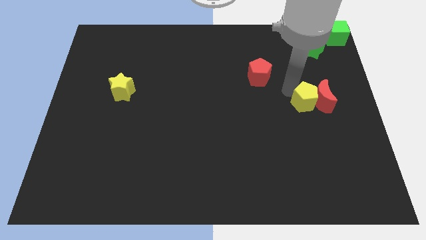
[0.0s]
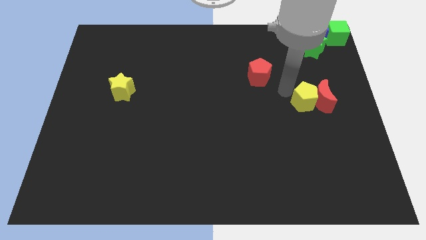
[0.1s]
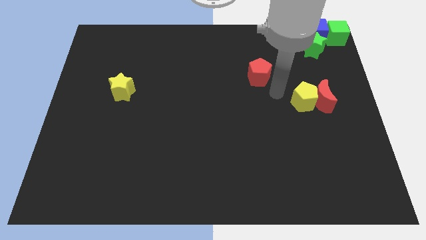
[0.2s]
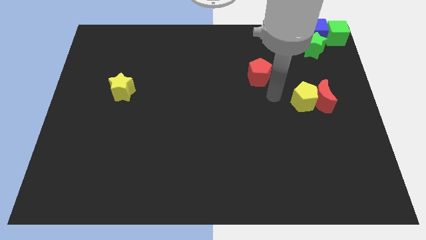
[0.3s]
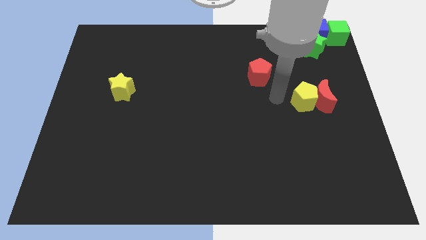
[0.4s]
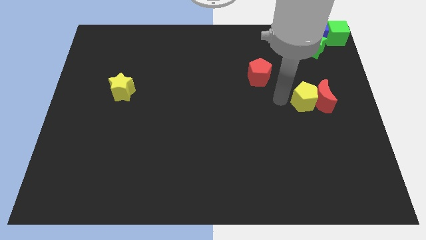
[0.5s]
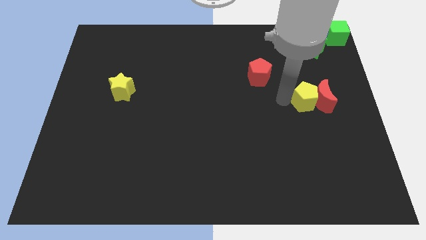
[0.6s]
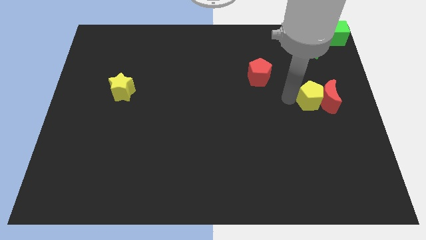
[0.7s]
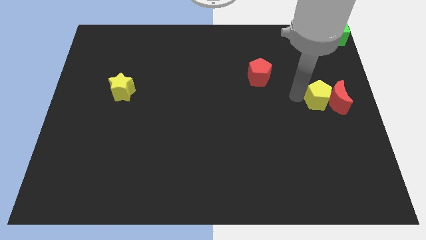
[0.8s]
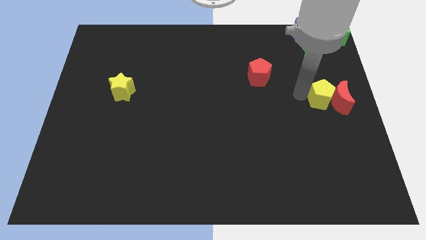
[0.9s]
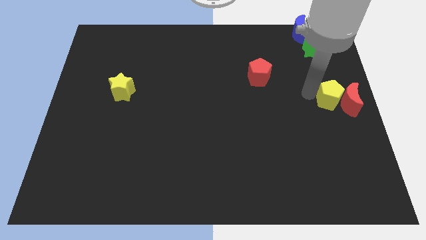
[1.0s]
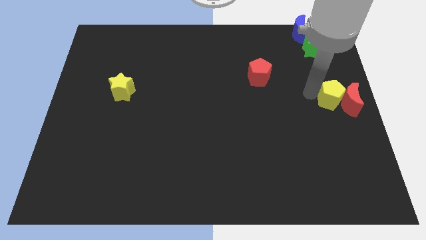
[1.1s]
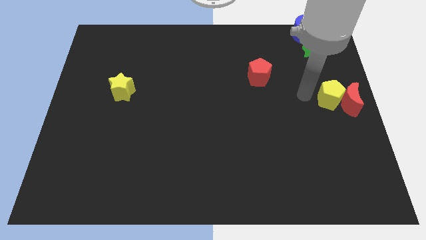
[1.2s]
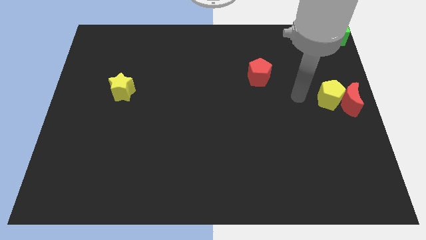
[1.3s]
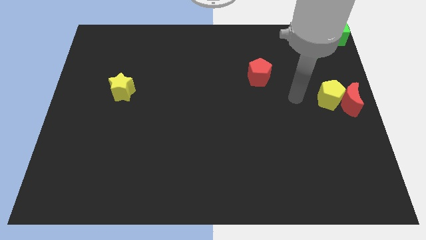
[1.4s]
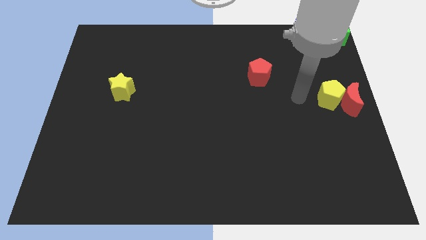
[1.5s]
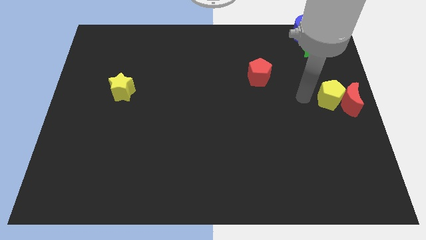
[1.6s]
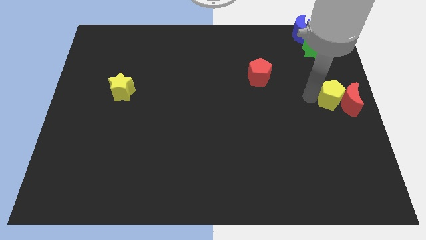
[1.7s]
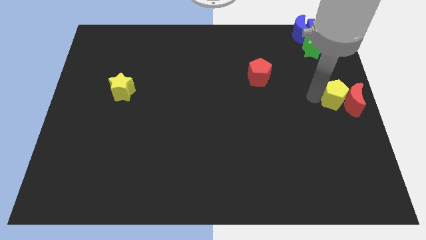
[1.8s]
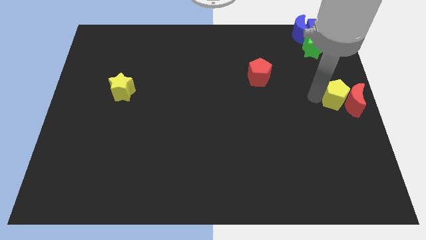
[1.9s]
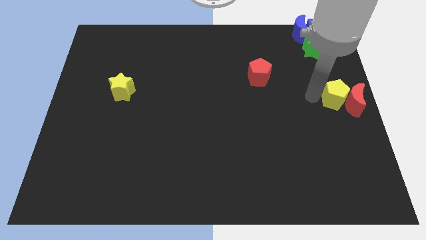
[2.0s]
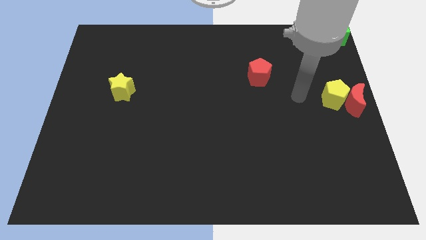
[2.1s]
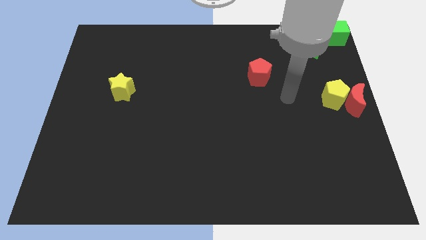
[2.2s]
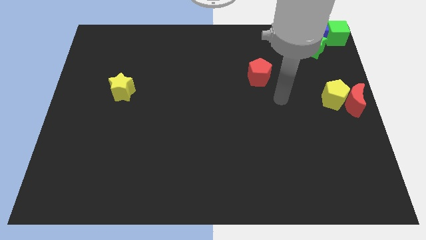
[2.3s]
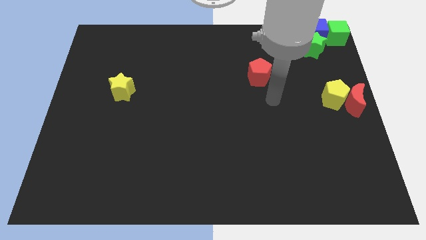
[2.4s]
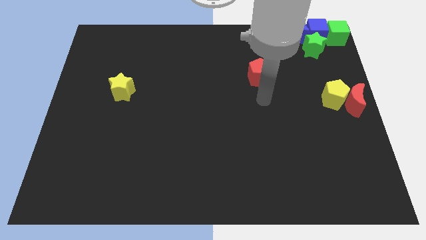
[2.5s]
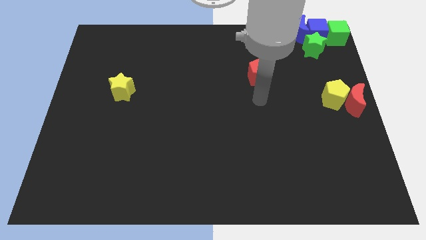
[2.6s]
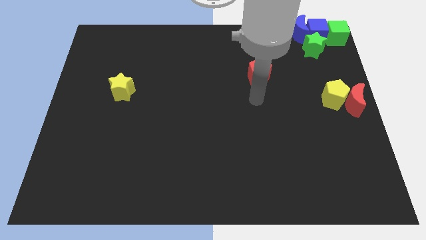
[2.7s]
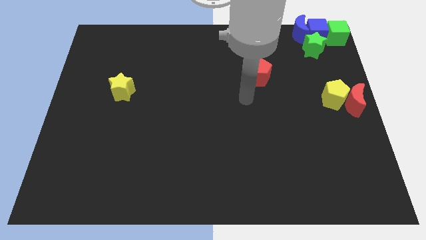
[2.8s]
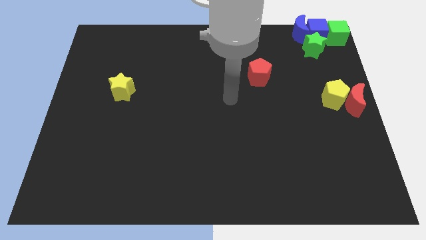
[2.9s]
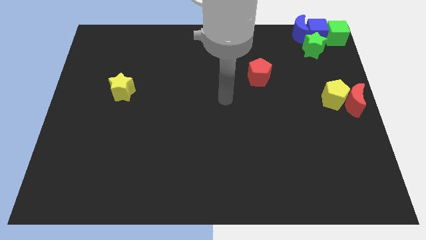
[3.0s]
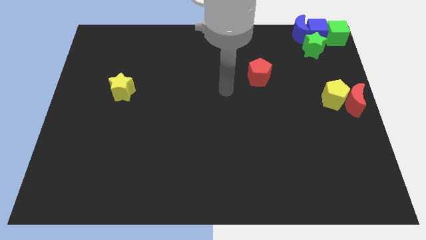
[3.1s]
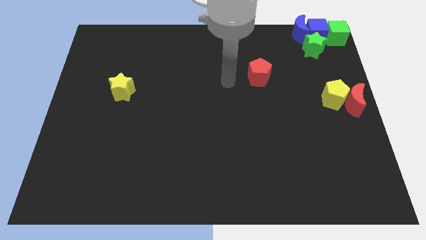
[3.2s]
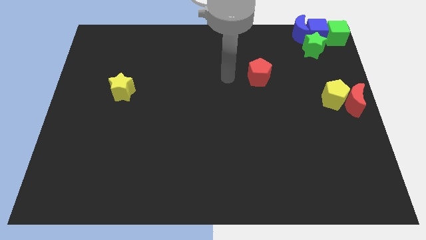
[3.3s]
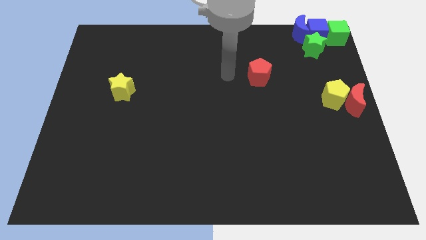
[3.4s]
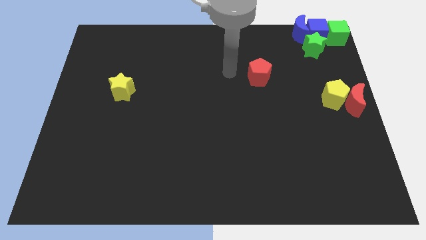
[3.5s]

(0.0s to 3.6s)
drag the yellow pentagon and the red moon to the center right

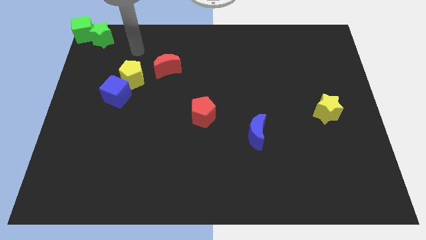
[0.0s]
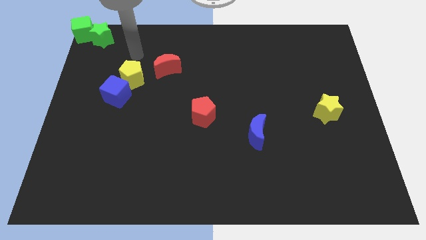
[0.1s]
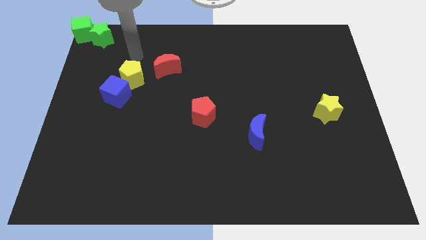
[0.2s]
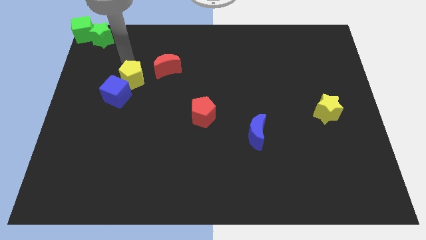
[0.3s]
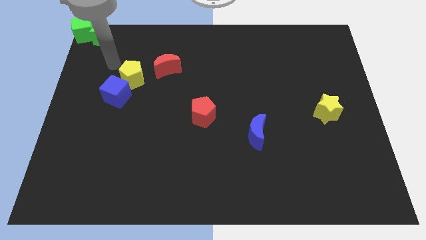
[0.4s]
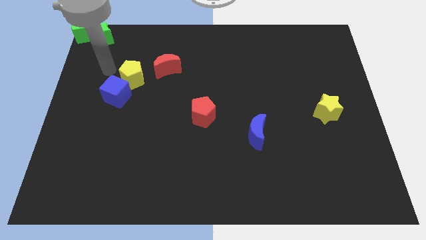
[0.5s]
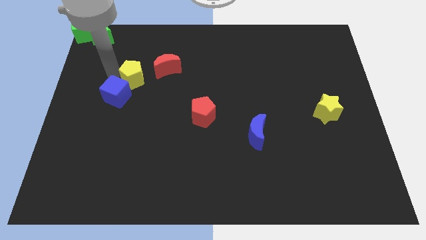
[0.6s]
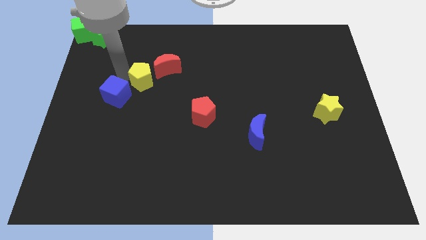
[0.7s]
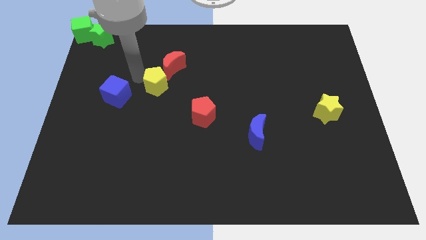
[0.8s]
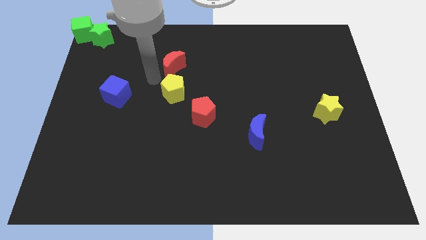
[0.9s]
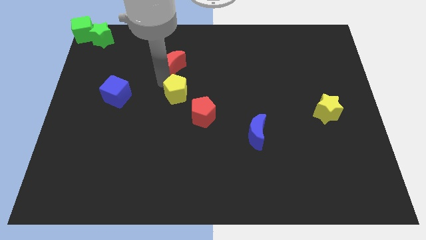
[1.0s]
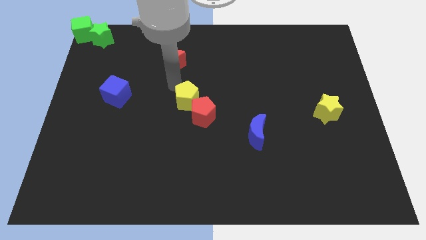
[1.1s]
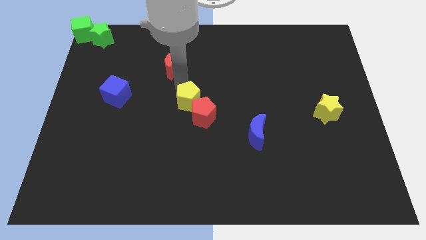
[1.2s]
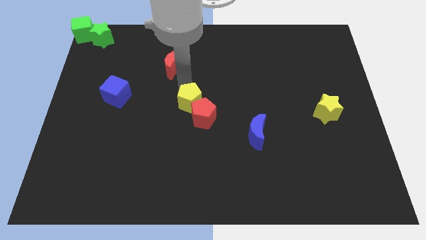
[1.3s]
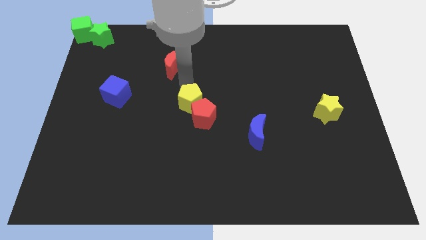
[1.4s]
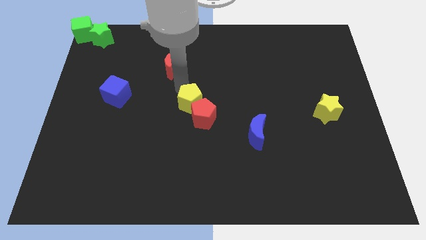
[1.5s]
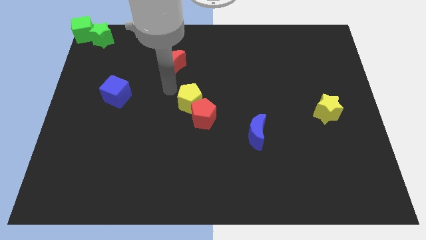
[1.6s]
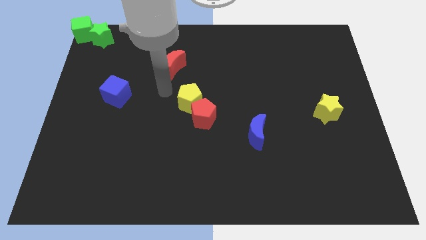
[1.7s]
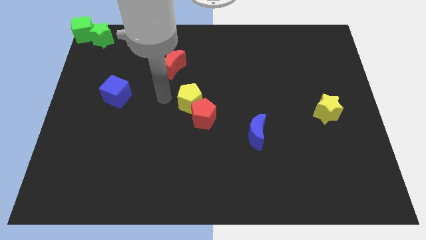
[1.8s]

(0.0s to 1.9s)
place the yellow pentagon in between the red pentagon and red crescent

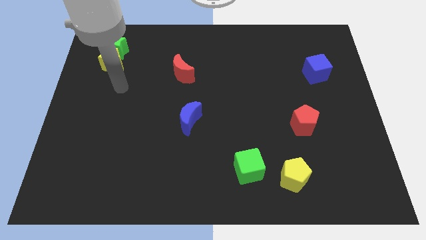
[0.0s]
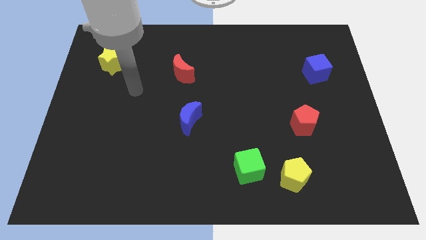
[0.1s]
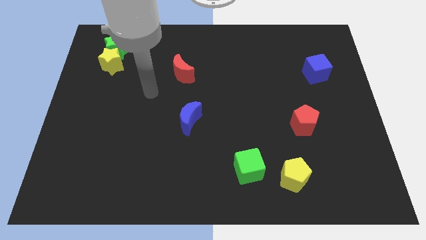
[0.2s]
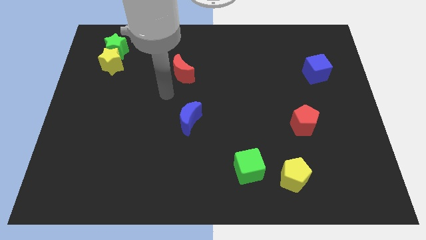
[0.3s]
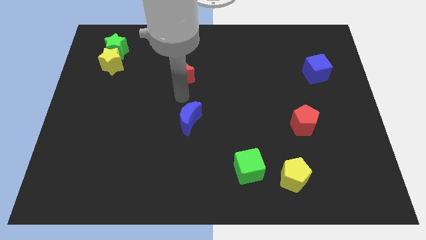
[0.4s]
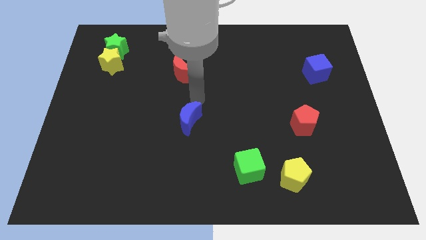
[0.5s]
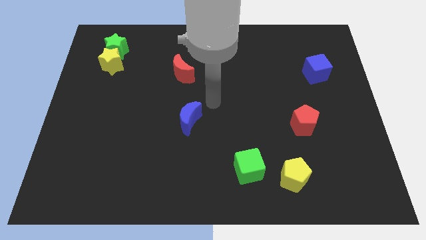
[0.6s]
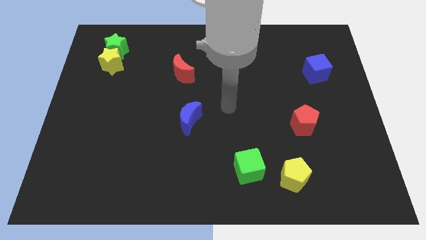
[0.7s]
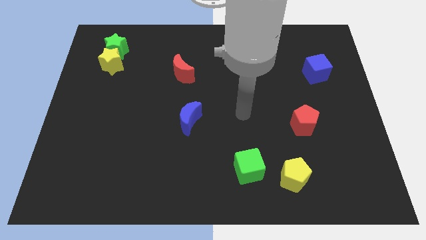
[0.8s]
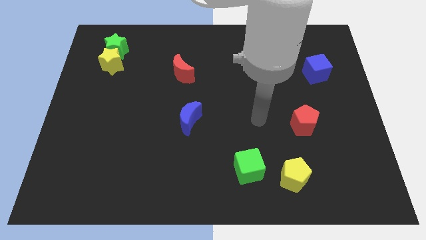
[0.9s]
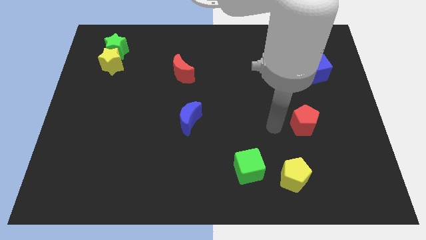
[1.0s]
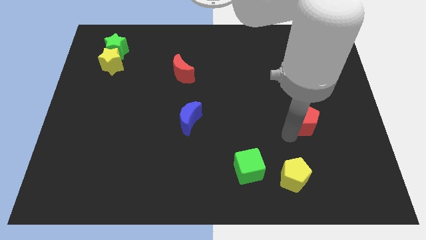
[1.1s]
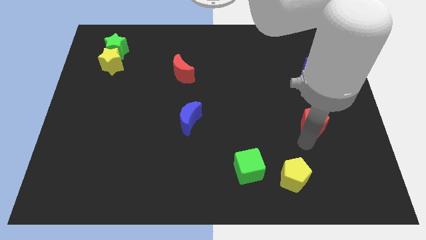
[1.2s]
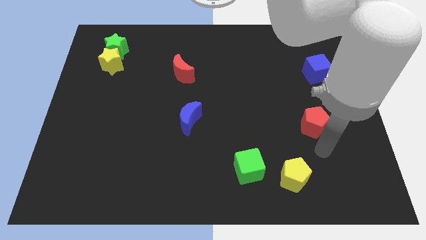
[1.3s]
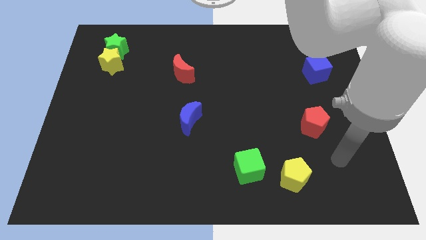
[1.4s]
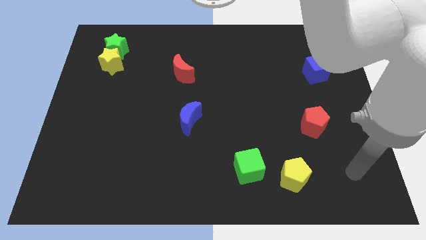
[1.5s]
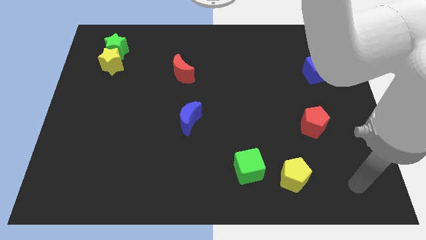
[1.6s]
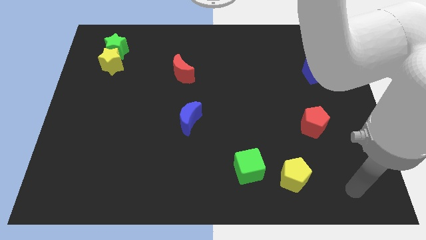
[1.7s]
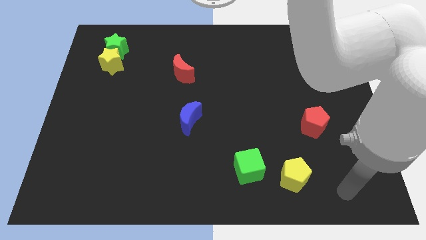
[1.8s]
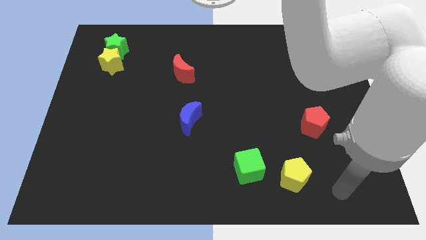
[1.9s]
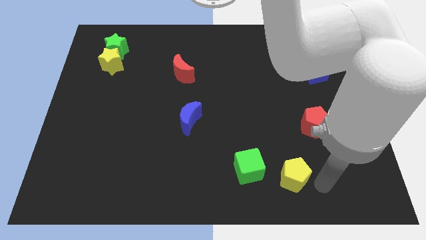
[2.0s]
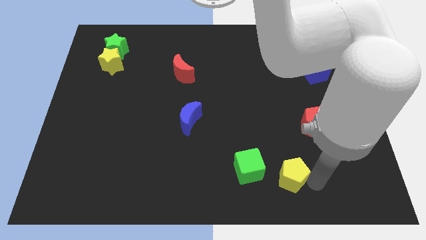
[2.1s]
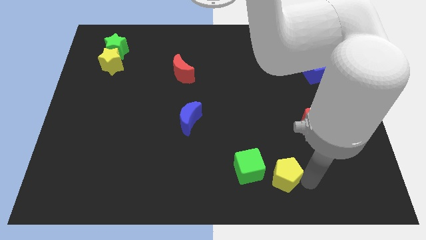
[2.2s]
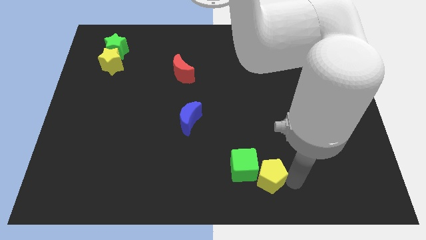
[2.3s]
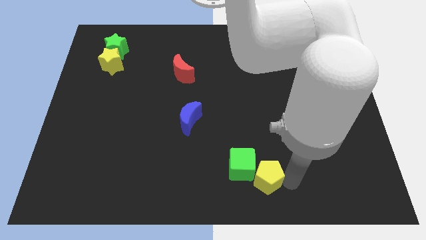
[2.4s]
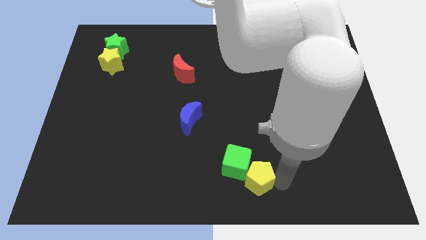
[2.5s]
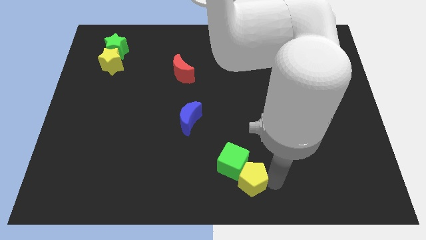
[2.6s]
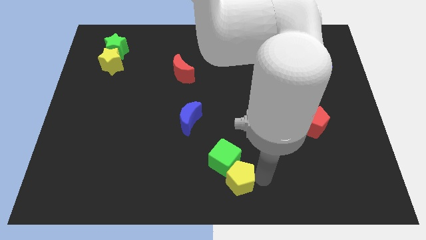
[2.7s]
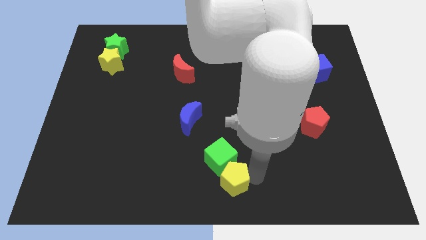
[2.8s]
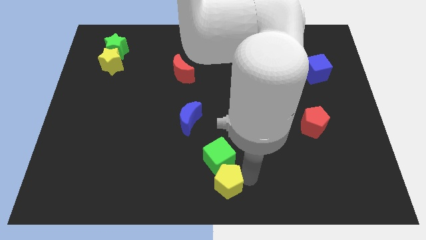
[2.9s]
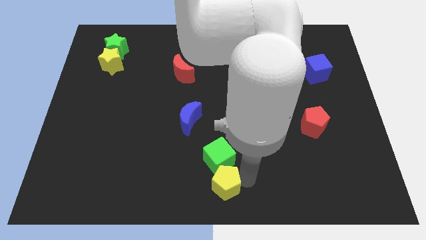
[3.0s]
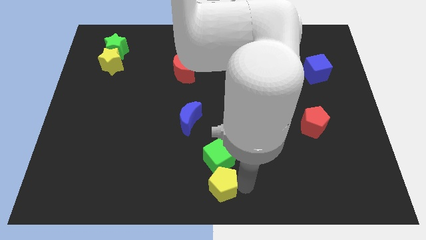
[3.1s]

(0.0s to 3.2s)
move yellow pentagon to the center

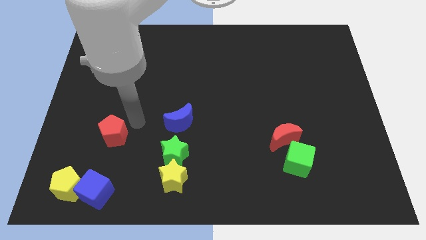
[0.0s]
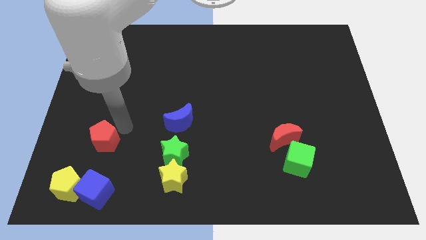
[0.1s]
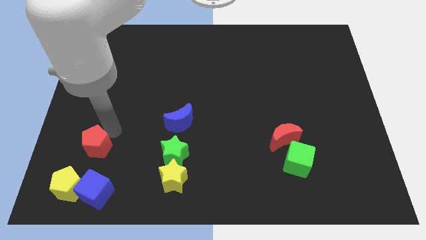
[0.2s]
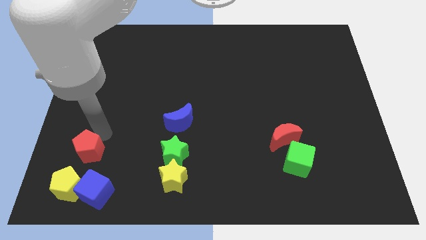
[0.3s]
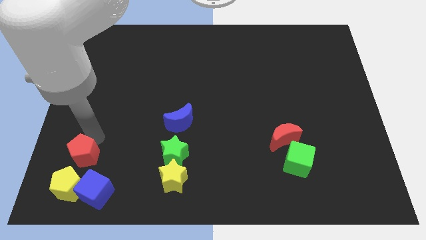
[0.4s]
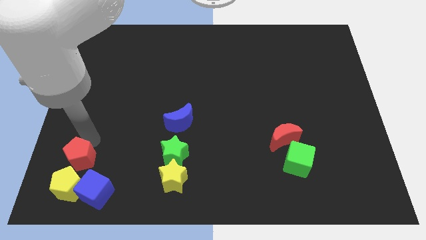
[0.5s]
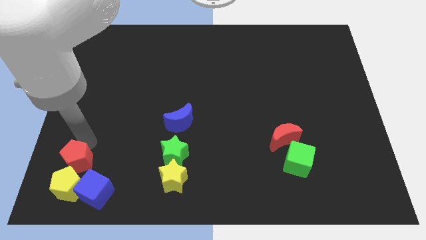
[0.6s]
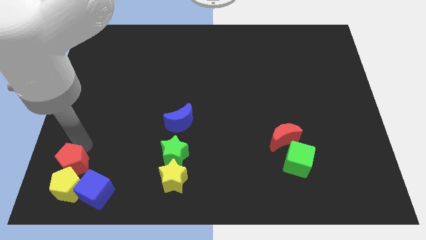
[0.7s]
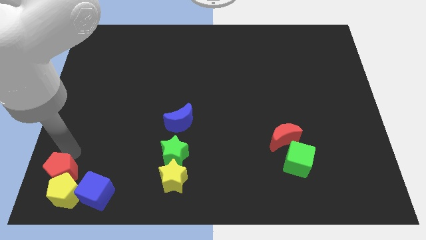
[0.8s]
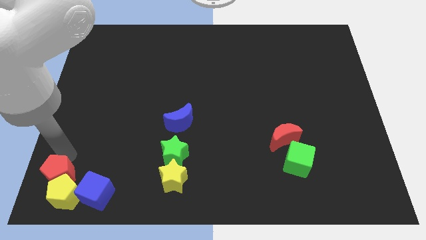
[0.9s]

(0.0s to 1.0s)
push red pentagon in to yellow pentagon
